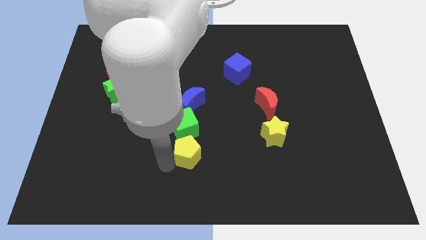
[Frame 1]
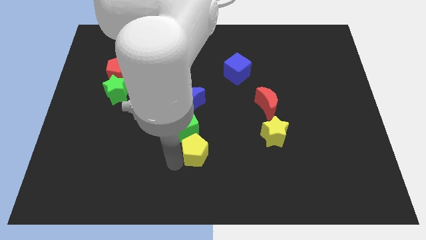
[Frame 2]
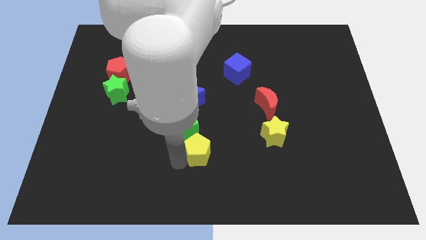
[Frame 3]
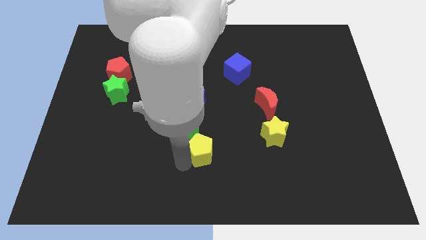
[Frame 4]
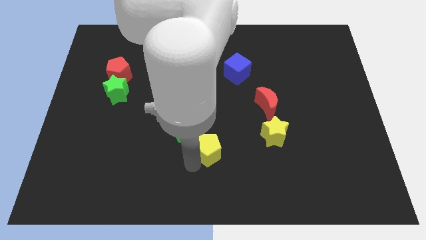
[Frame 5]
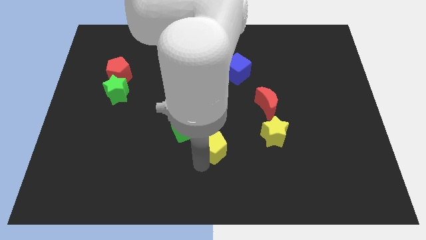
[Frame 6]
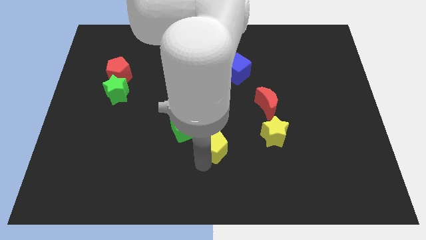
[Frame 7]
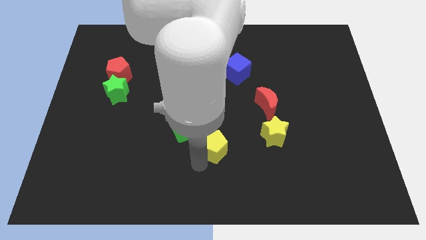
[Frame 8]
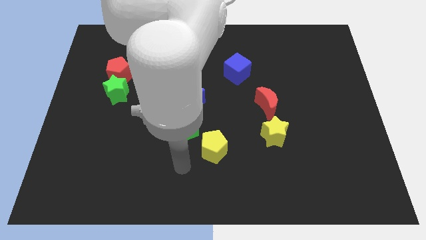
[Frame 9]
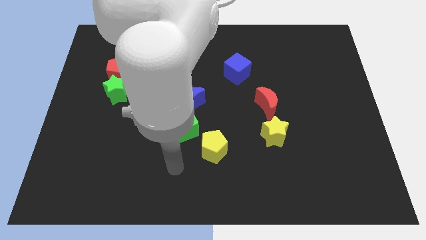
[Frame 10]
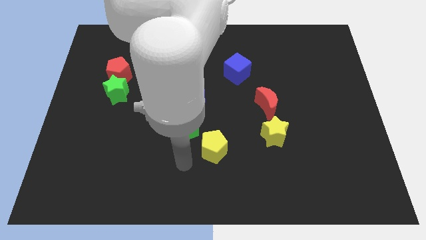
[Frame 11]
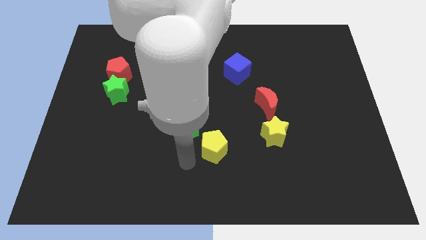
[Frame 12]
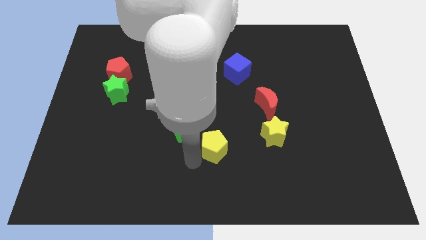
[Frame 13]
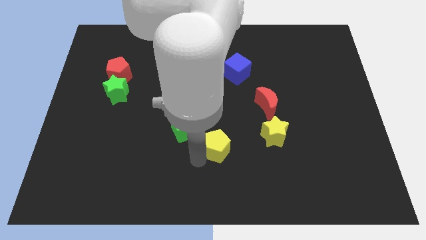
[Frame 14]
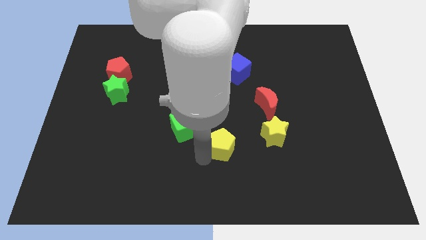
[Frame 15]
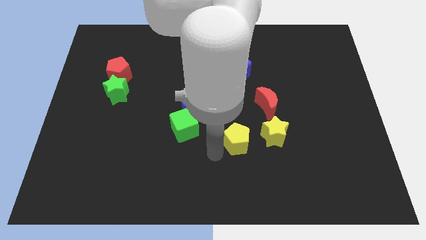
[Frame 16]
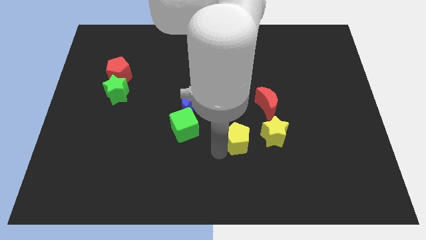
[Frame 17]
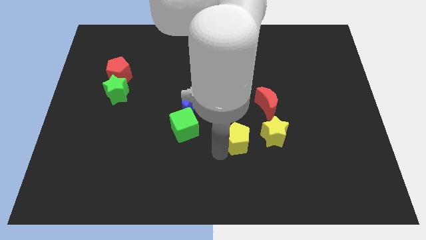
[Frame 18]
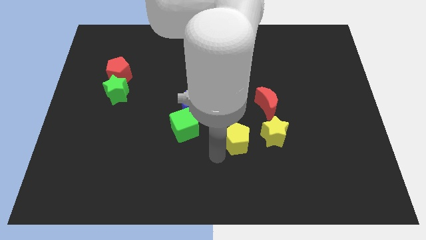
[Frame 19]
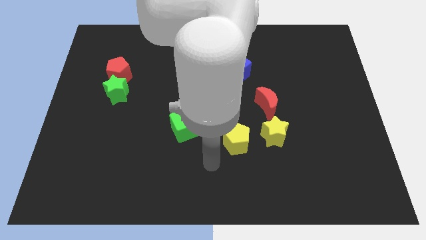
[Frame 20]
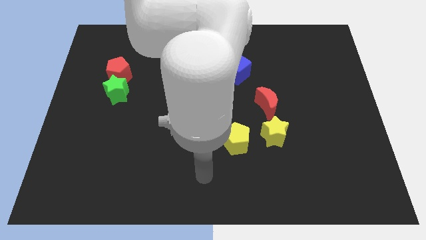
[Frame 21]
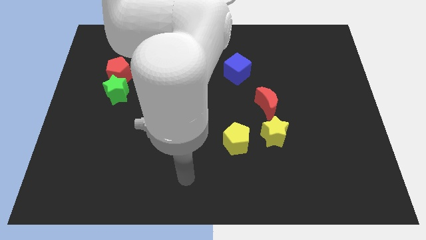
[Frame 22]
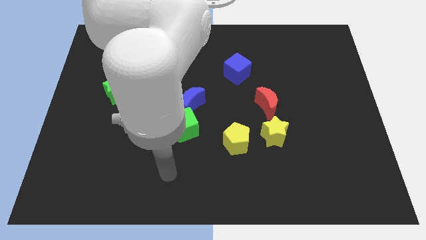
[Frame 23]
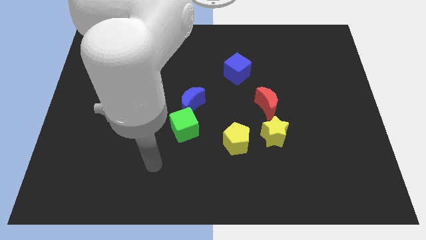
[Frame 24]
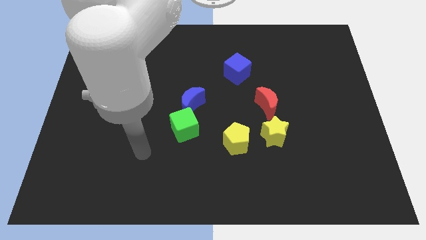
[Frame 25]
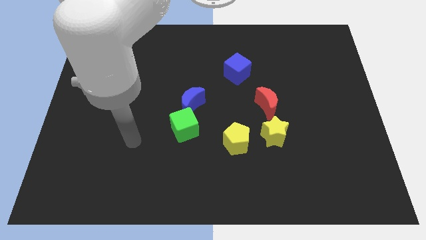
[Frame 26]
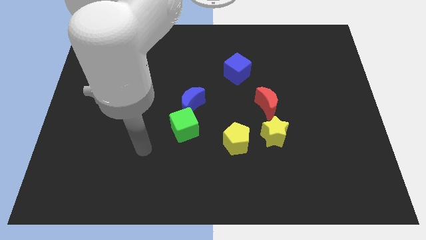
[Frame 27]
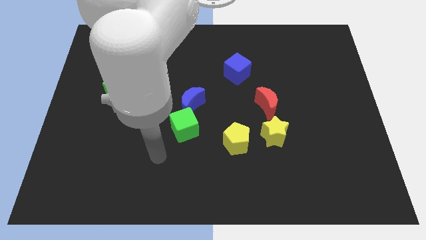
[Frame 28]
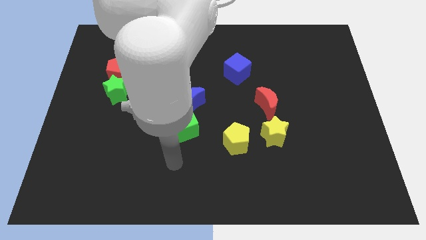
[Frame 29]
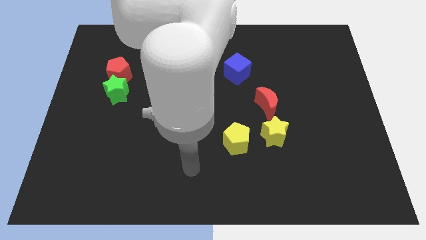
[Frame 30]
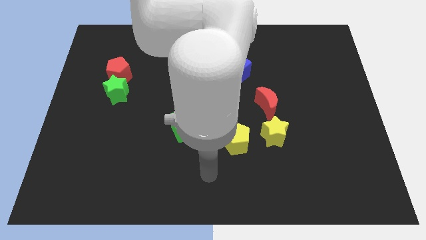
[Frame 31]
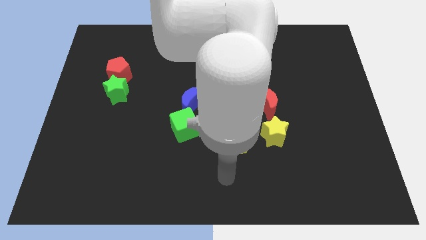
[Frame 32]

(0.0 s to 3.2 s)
separate the yellow pentagon away from the green cube

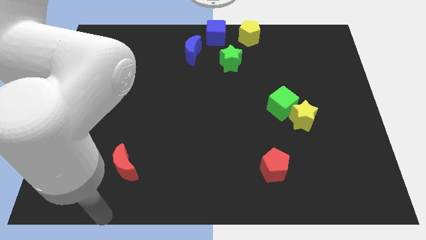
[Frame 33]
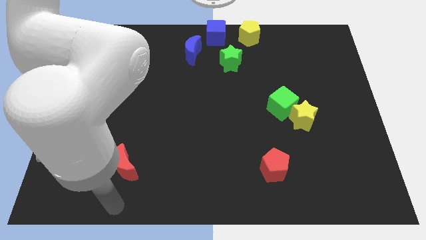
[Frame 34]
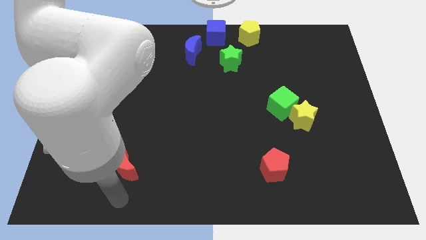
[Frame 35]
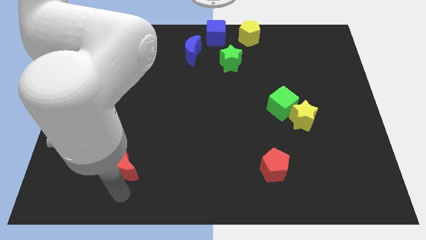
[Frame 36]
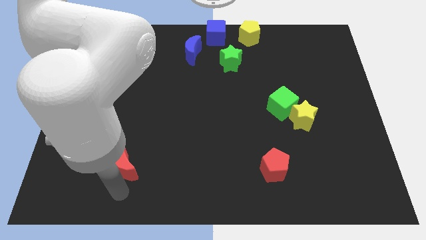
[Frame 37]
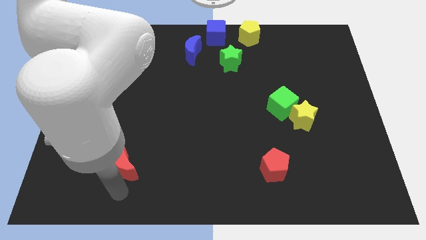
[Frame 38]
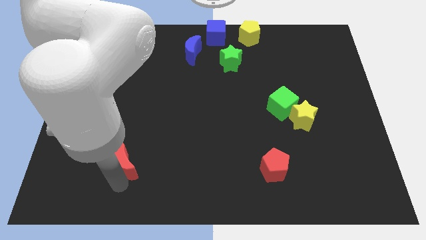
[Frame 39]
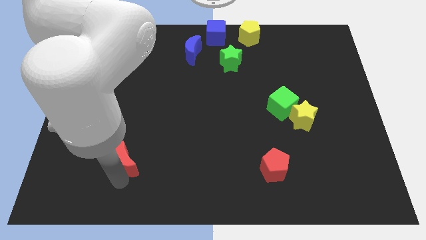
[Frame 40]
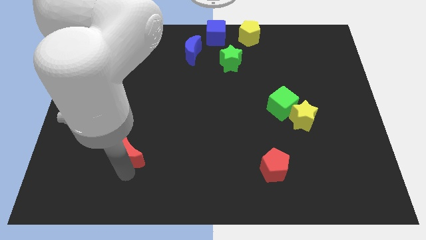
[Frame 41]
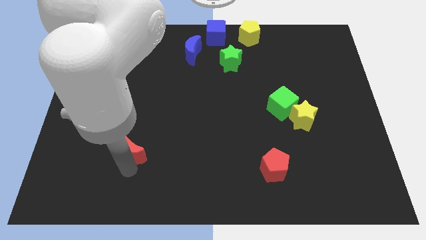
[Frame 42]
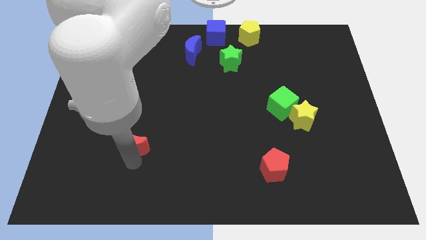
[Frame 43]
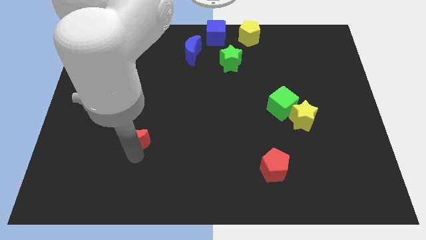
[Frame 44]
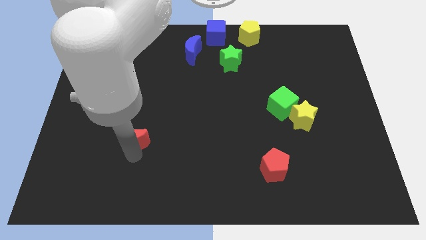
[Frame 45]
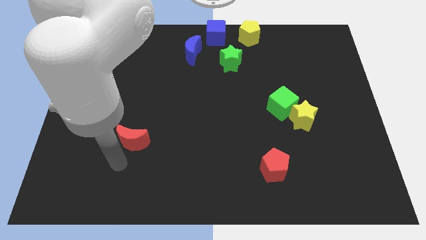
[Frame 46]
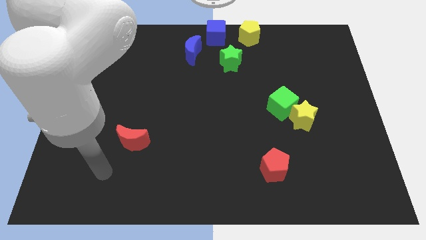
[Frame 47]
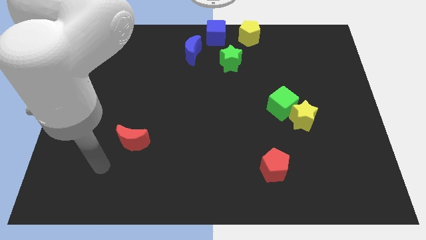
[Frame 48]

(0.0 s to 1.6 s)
push the red moon upwards slightly

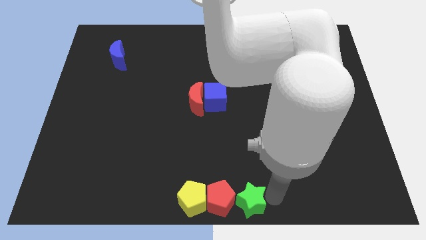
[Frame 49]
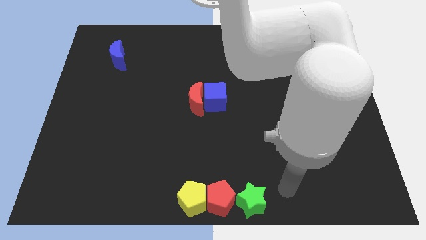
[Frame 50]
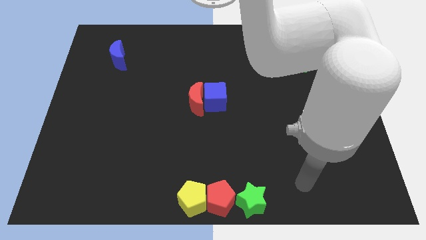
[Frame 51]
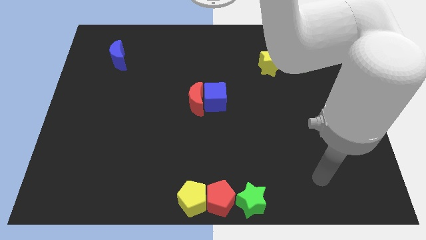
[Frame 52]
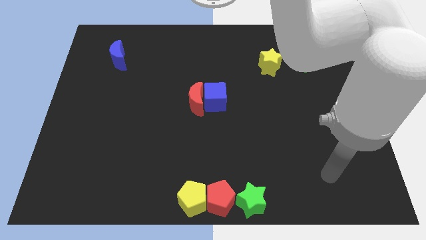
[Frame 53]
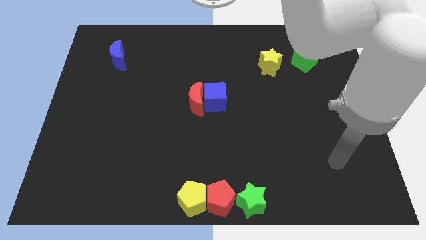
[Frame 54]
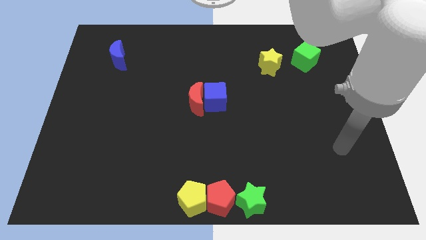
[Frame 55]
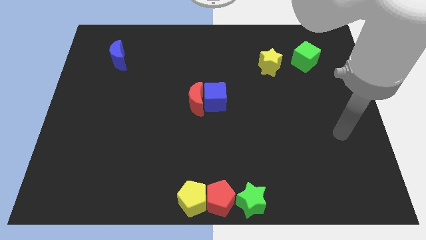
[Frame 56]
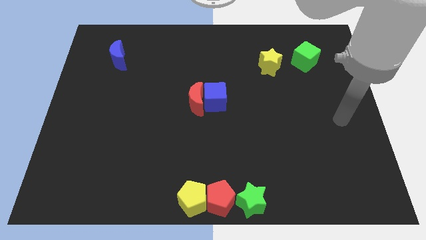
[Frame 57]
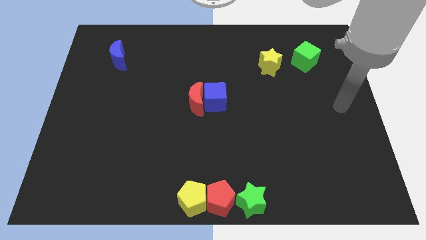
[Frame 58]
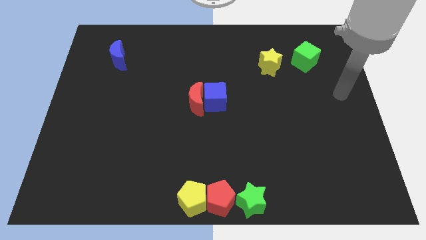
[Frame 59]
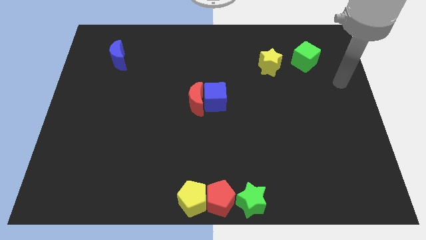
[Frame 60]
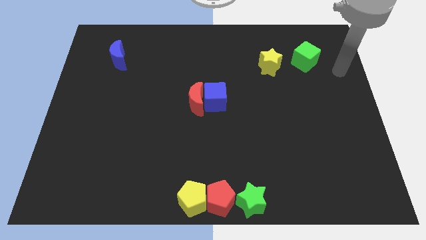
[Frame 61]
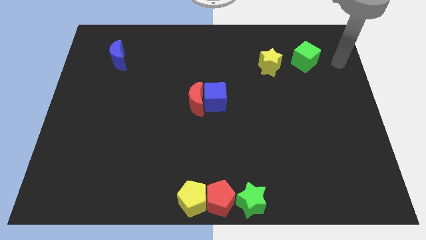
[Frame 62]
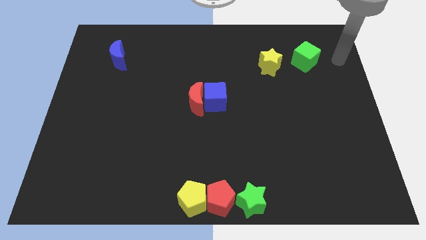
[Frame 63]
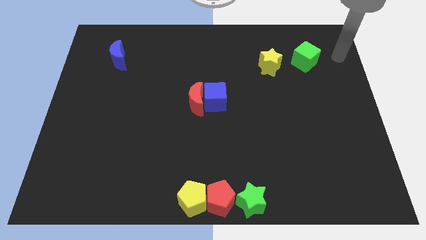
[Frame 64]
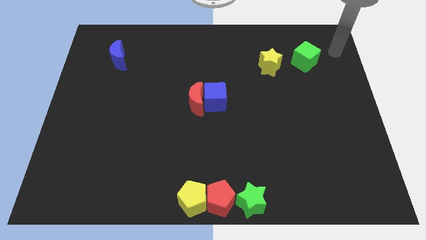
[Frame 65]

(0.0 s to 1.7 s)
move your arm away from the green star

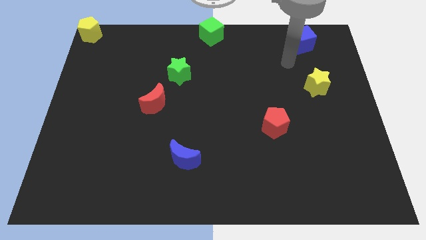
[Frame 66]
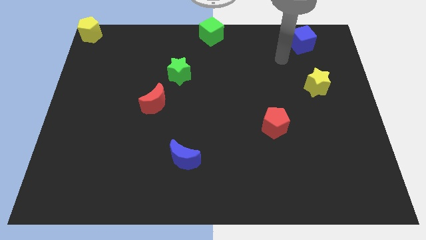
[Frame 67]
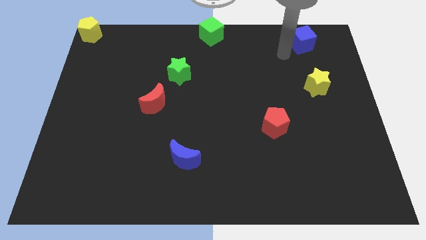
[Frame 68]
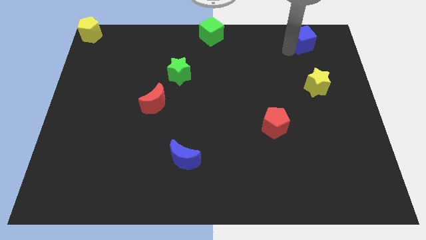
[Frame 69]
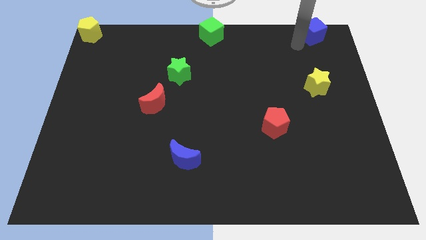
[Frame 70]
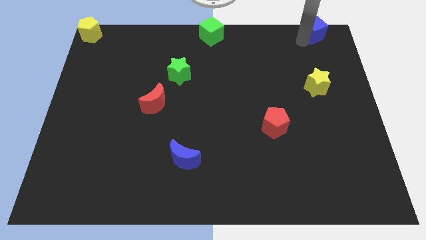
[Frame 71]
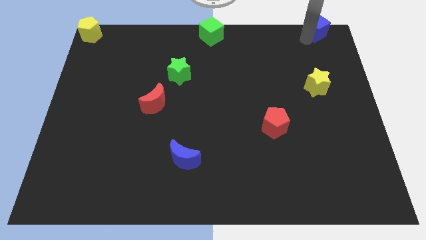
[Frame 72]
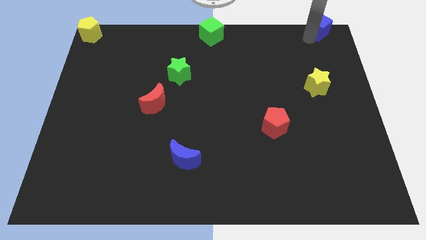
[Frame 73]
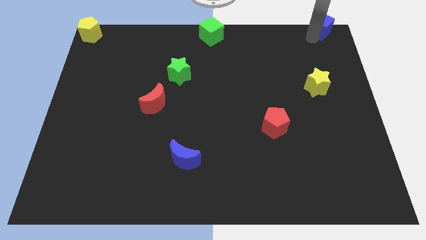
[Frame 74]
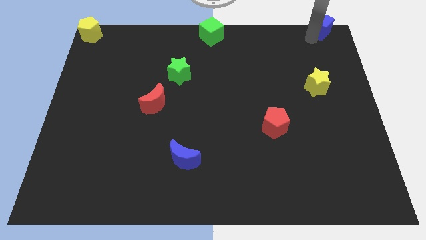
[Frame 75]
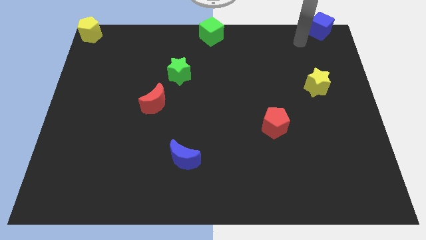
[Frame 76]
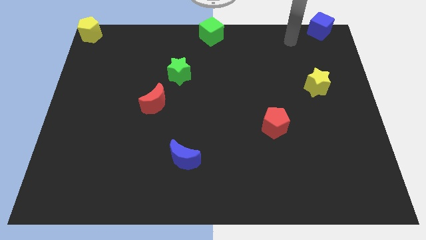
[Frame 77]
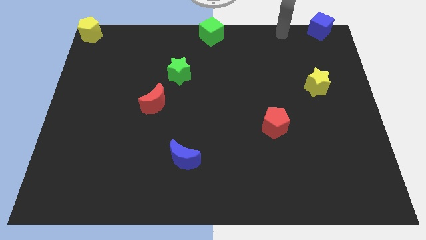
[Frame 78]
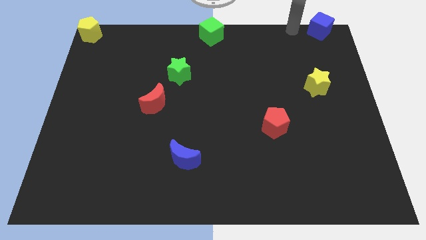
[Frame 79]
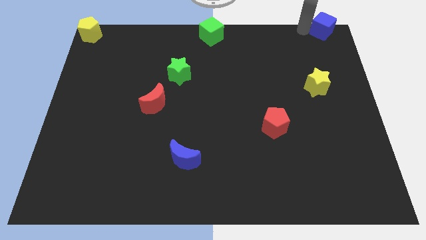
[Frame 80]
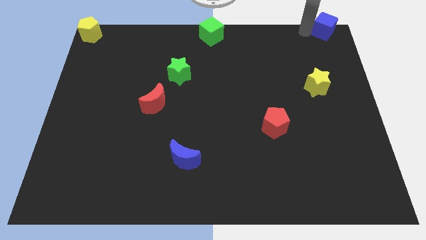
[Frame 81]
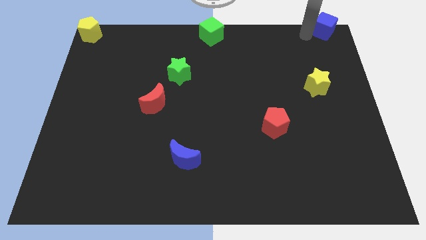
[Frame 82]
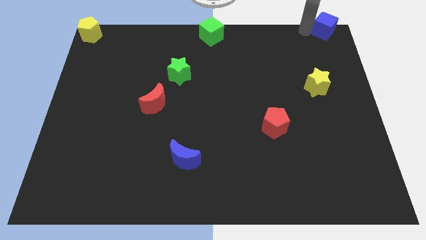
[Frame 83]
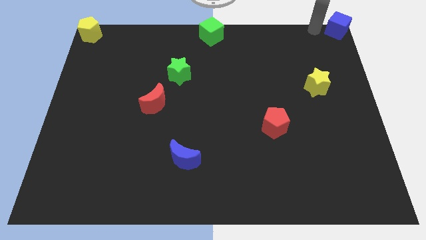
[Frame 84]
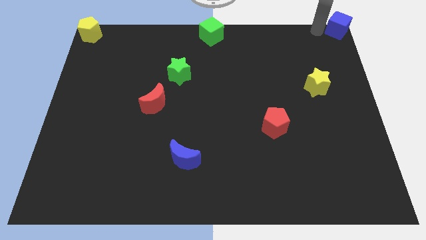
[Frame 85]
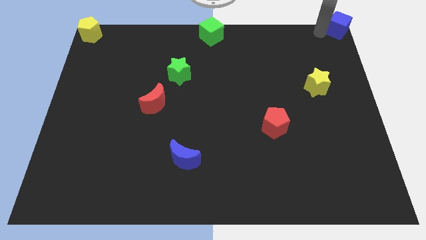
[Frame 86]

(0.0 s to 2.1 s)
push the blue cube to the top right corner of the board

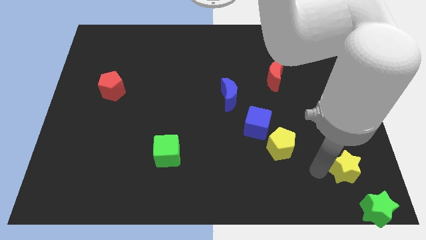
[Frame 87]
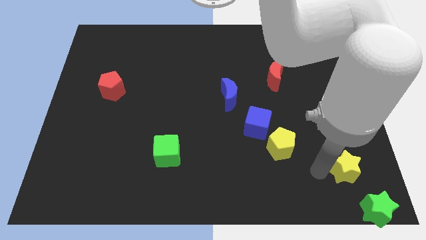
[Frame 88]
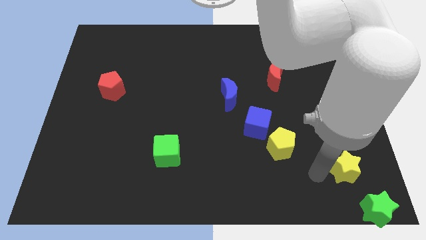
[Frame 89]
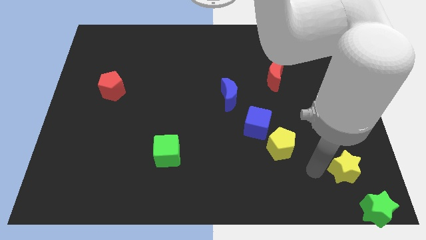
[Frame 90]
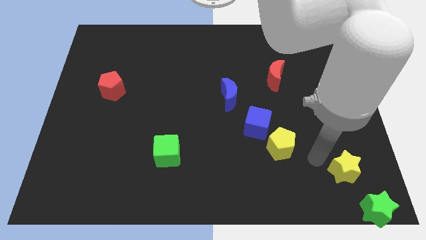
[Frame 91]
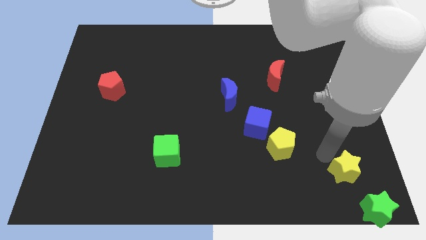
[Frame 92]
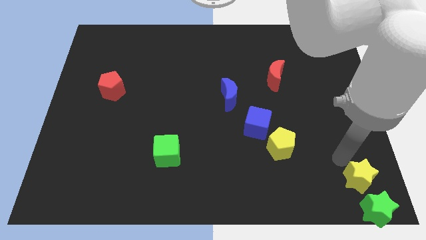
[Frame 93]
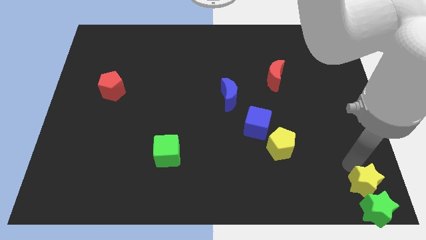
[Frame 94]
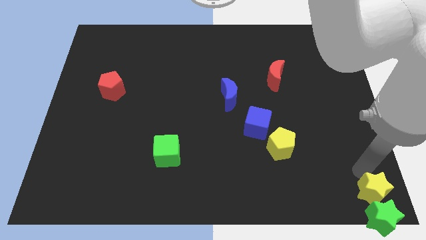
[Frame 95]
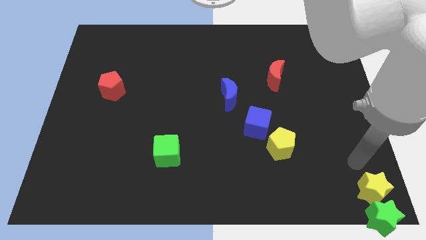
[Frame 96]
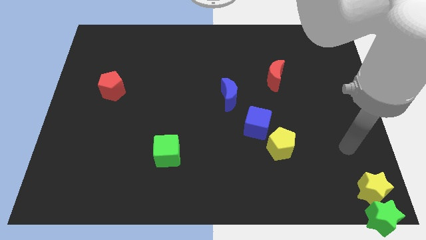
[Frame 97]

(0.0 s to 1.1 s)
push yellow star in to green star
